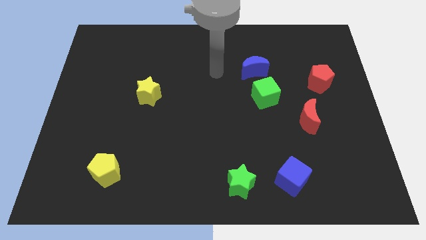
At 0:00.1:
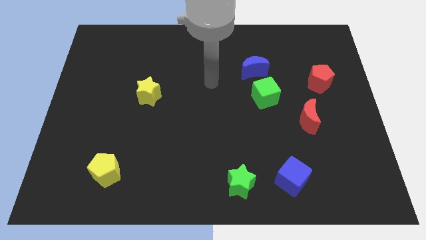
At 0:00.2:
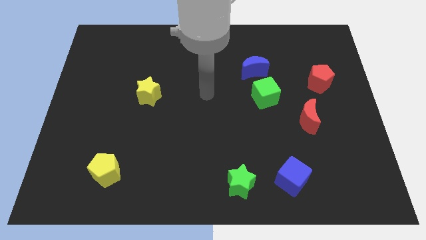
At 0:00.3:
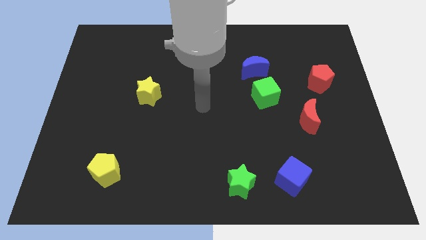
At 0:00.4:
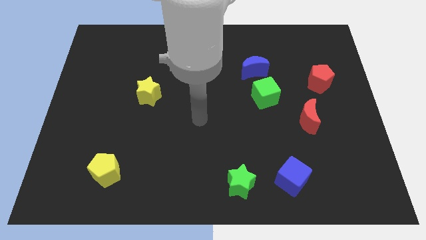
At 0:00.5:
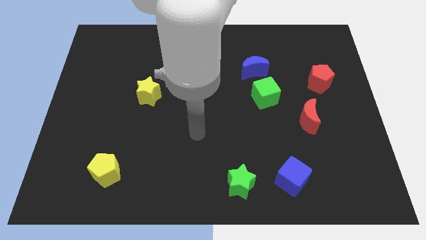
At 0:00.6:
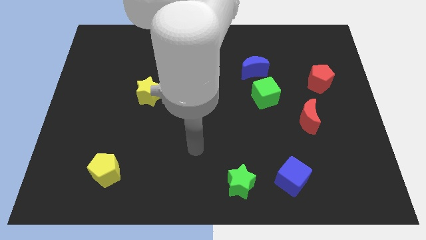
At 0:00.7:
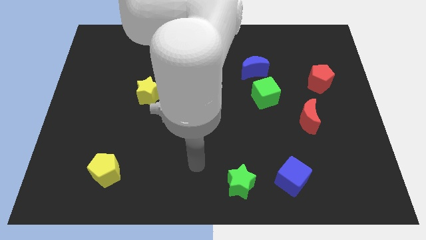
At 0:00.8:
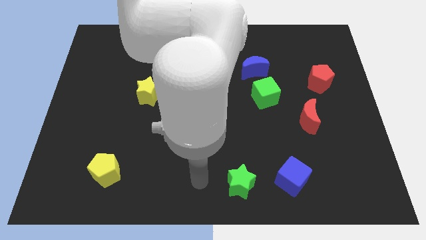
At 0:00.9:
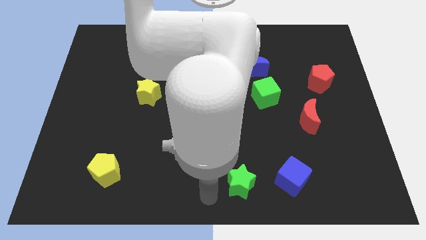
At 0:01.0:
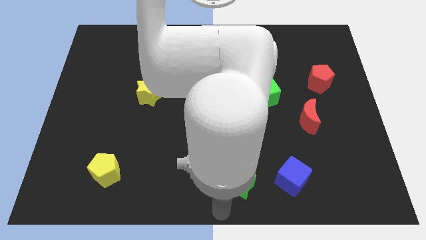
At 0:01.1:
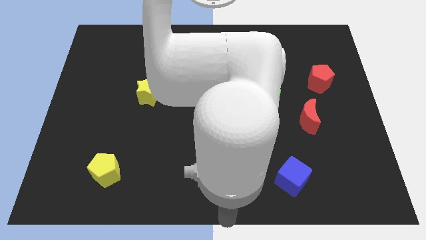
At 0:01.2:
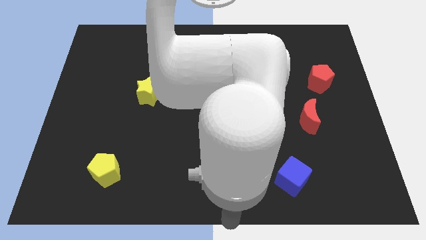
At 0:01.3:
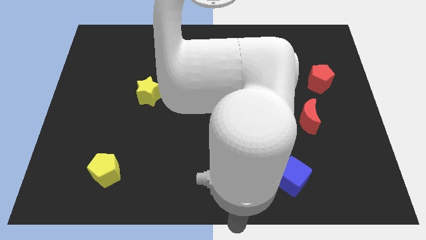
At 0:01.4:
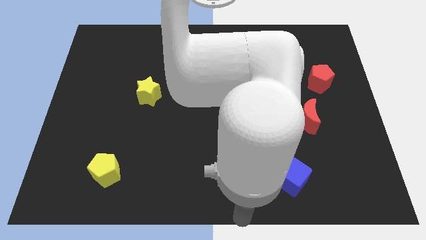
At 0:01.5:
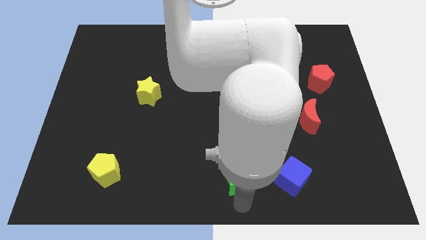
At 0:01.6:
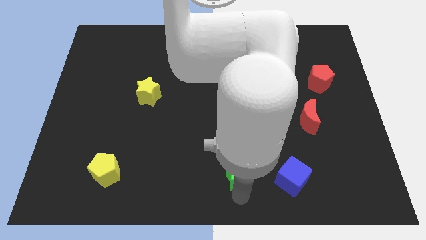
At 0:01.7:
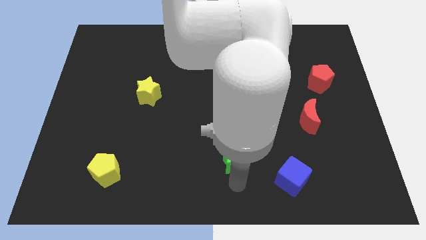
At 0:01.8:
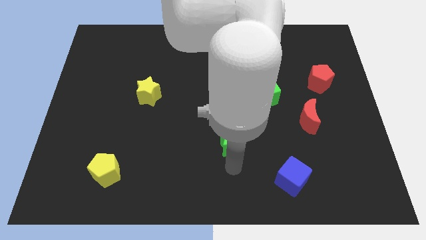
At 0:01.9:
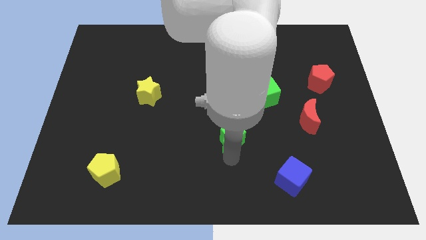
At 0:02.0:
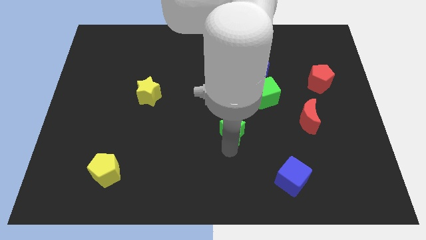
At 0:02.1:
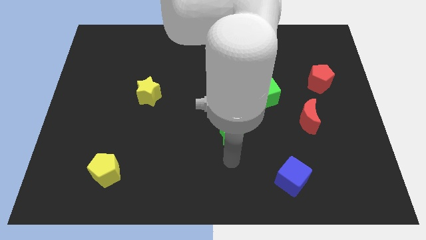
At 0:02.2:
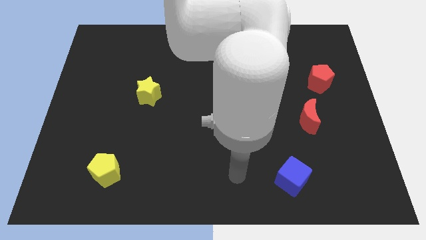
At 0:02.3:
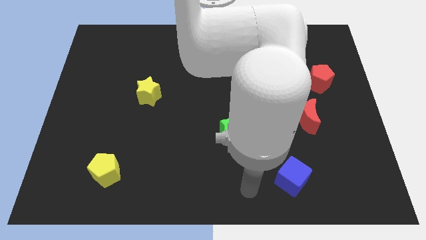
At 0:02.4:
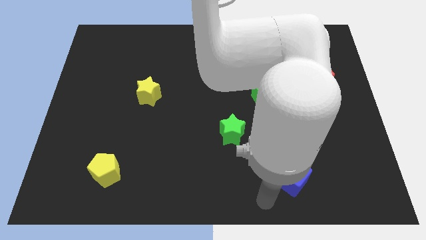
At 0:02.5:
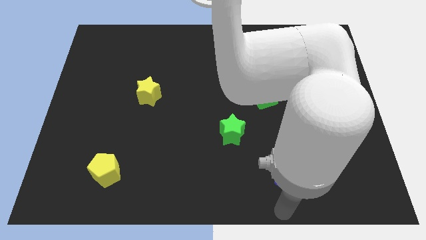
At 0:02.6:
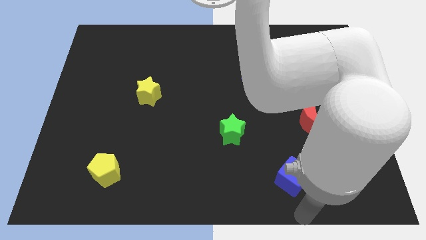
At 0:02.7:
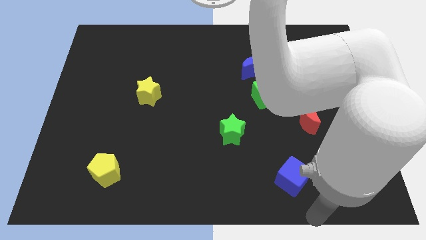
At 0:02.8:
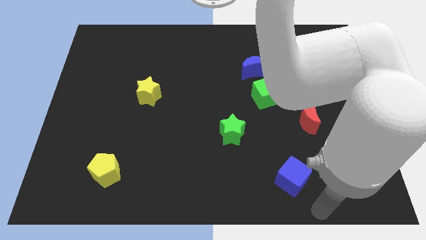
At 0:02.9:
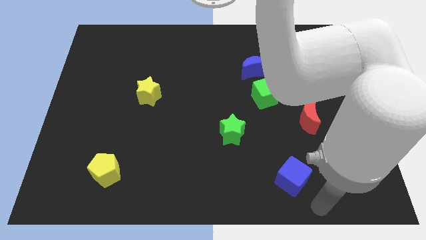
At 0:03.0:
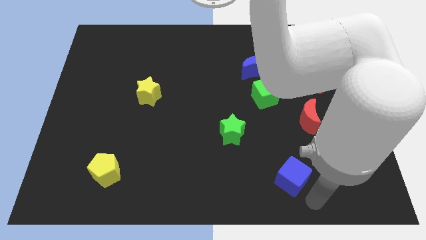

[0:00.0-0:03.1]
place your arm towards rights side of blue cube

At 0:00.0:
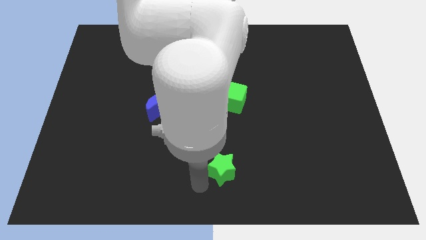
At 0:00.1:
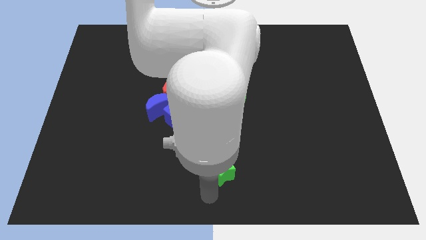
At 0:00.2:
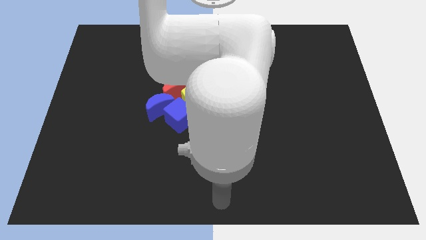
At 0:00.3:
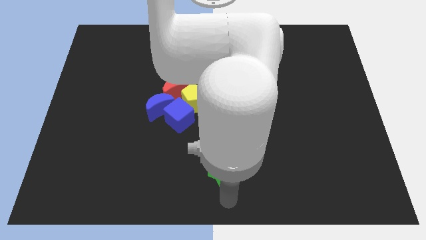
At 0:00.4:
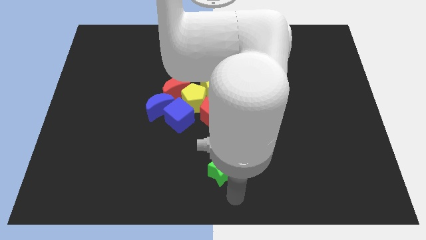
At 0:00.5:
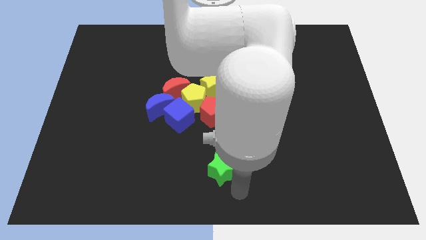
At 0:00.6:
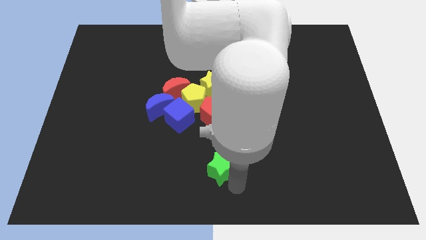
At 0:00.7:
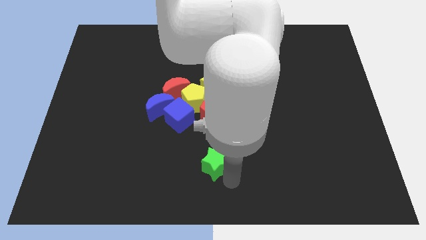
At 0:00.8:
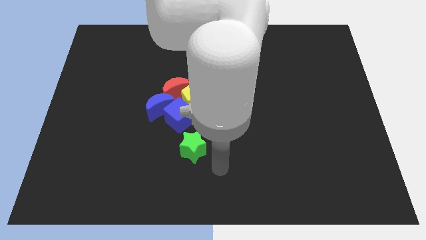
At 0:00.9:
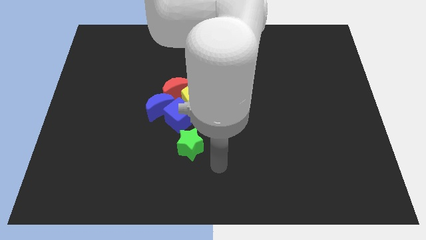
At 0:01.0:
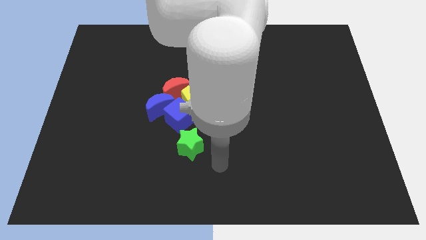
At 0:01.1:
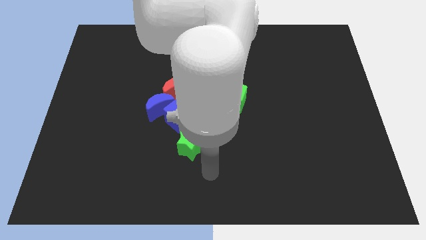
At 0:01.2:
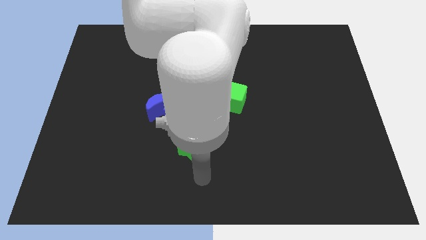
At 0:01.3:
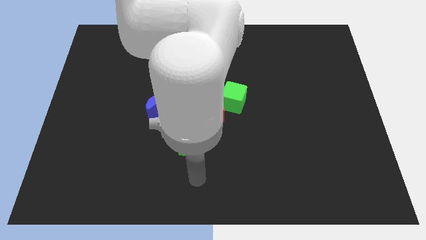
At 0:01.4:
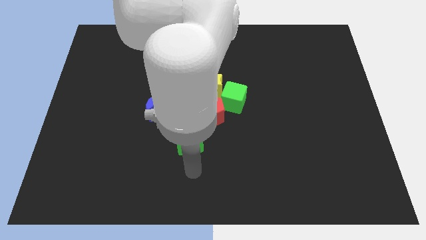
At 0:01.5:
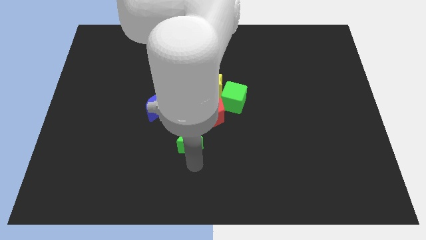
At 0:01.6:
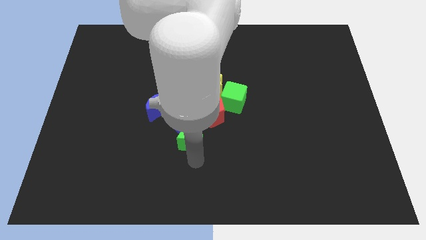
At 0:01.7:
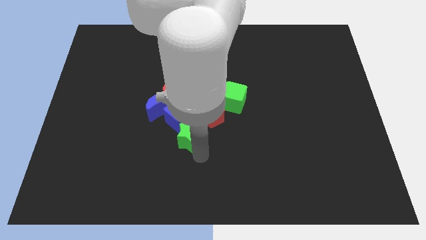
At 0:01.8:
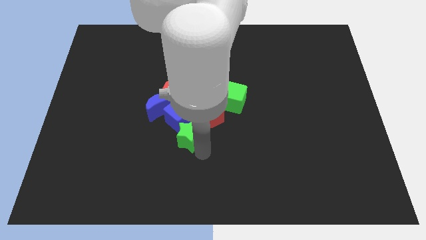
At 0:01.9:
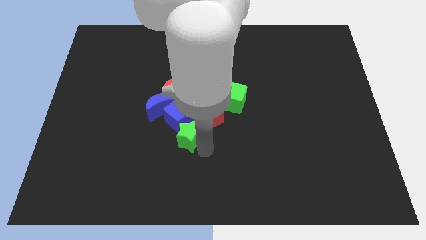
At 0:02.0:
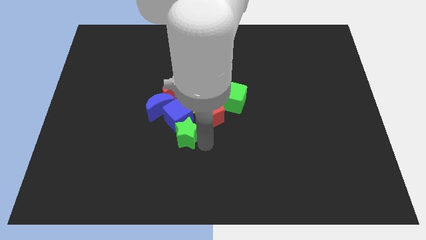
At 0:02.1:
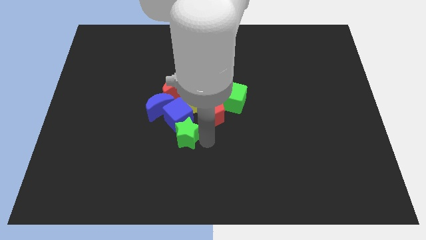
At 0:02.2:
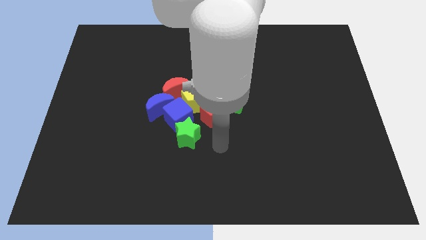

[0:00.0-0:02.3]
push the green star into the bottom side of the blue cube

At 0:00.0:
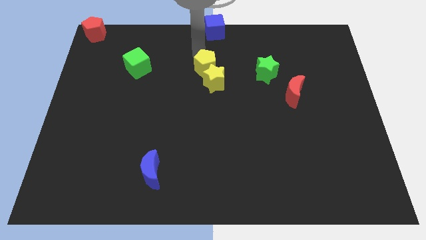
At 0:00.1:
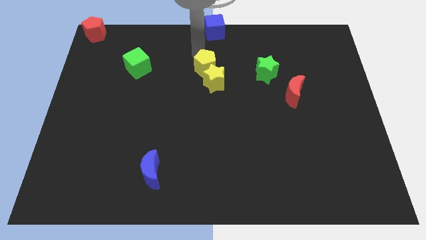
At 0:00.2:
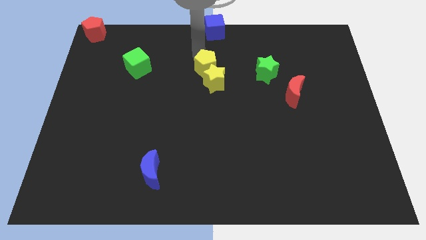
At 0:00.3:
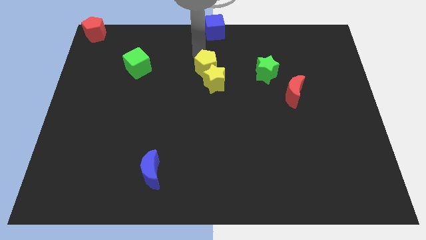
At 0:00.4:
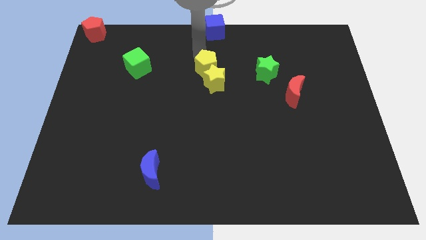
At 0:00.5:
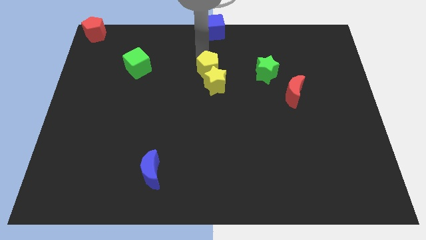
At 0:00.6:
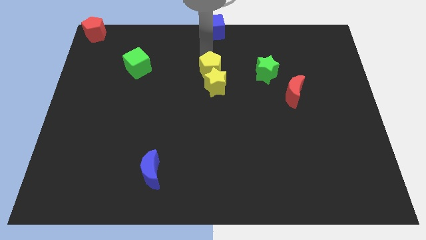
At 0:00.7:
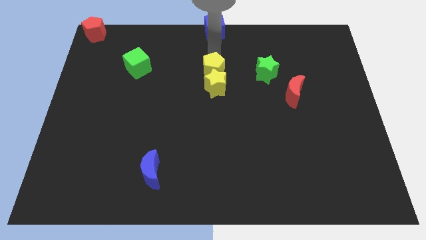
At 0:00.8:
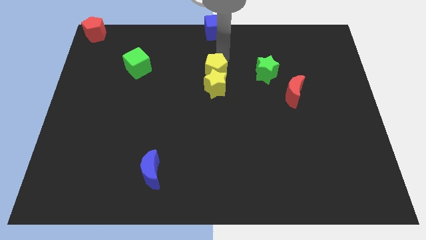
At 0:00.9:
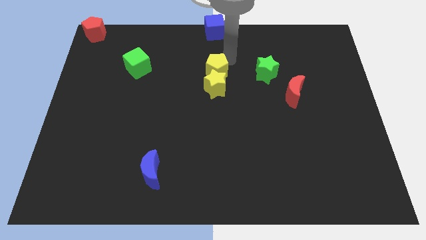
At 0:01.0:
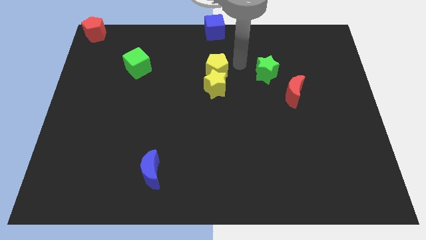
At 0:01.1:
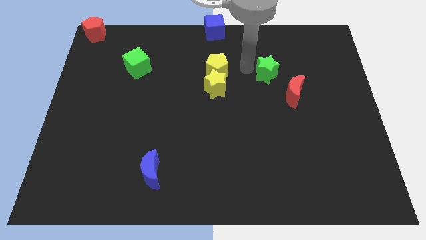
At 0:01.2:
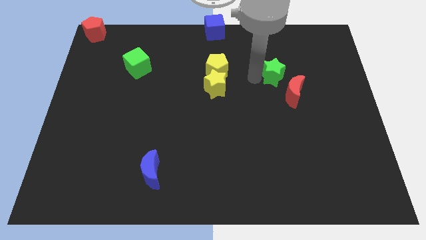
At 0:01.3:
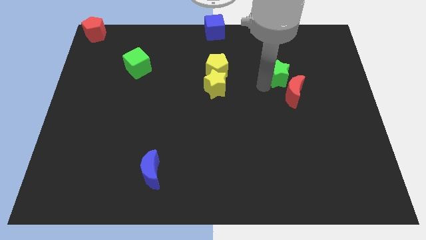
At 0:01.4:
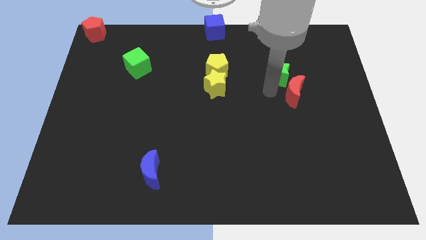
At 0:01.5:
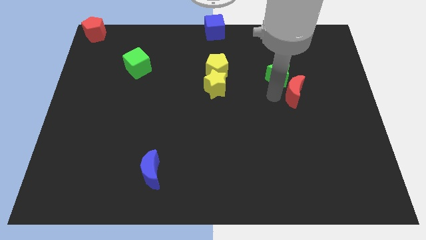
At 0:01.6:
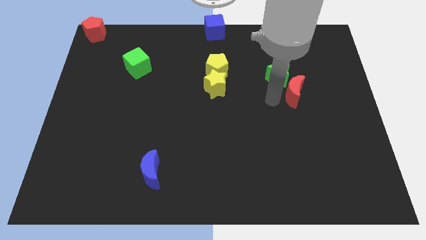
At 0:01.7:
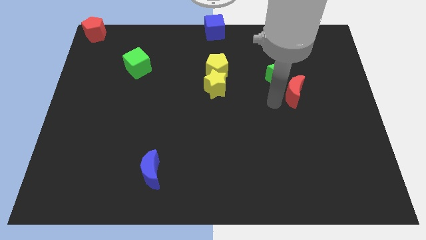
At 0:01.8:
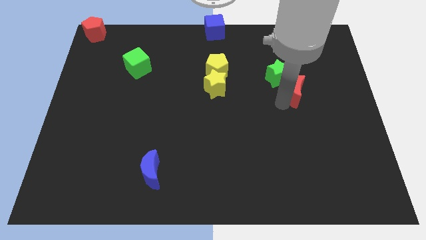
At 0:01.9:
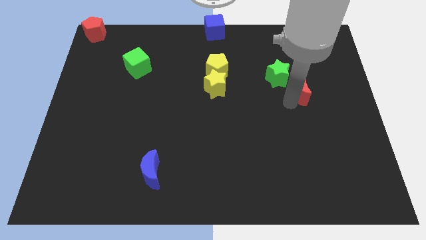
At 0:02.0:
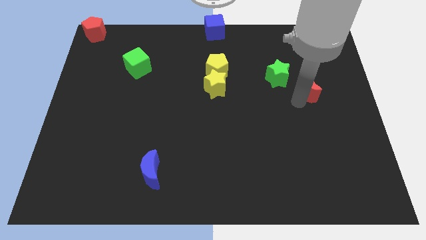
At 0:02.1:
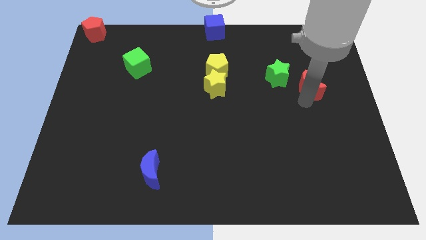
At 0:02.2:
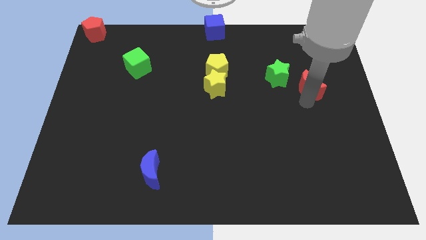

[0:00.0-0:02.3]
slide the yellow pentagon into the yellow star

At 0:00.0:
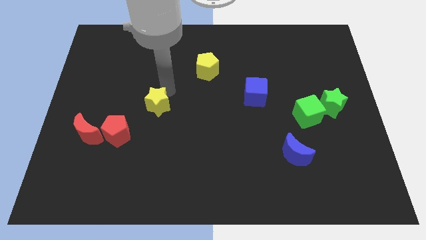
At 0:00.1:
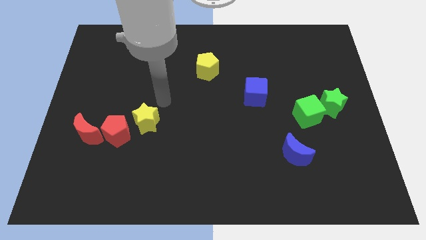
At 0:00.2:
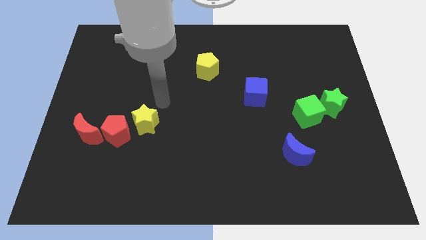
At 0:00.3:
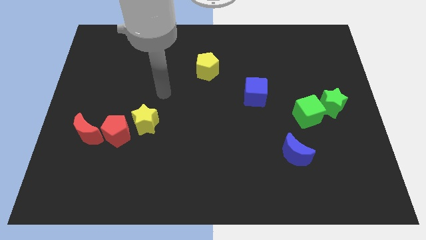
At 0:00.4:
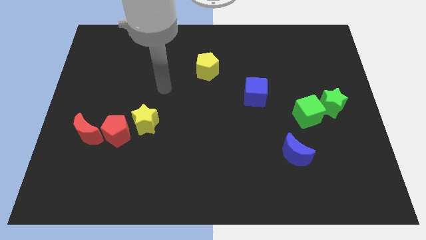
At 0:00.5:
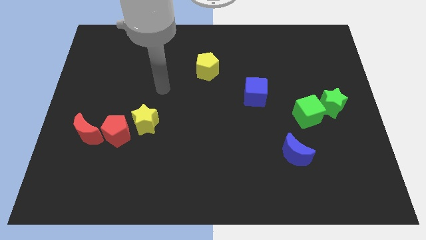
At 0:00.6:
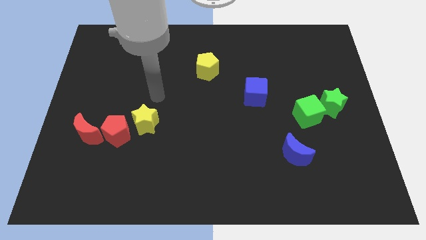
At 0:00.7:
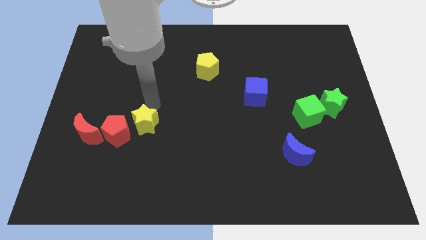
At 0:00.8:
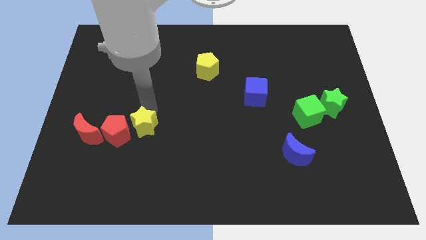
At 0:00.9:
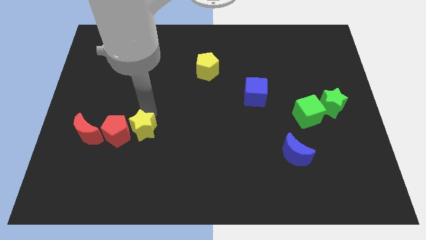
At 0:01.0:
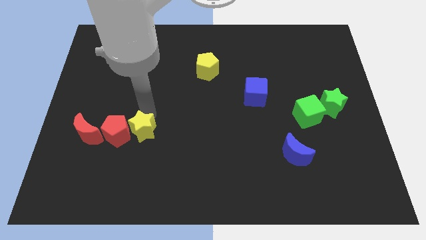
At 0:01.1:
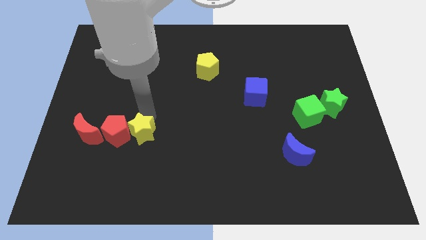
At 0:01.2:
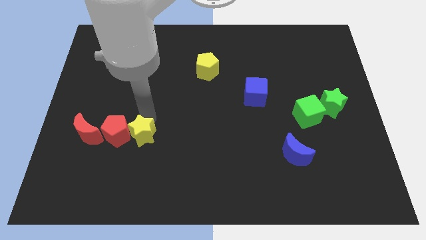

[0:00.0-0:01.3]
slide the yellow star to the right side of the red pentagon
